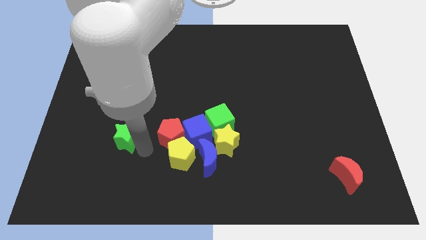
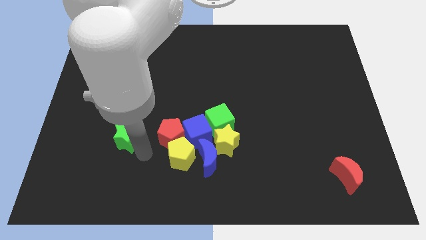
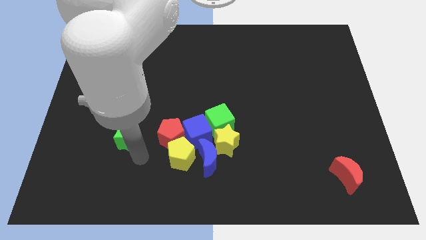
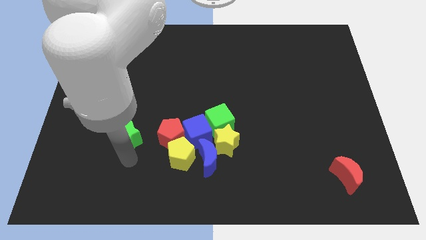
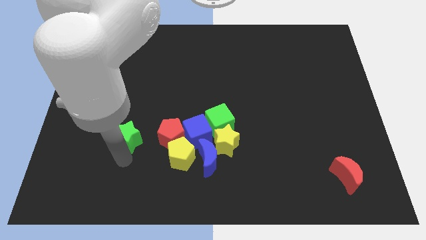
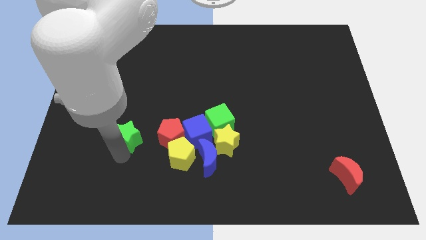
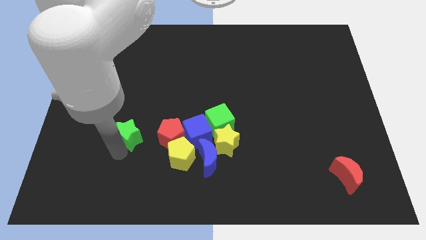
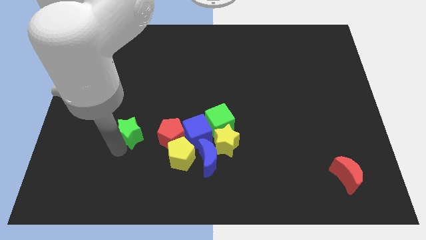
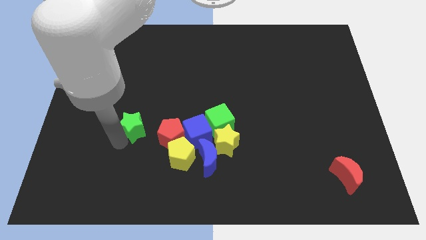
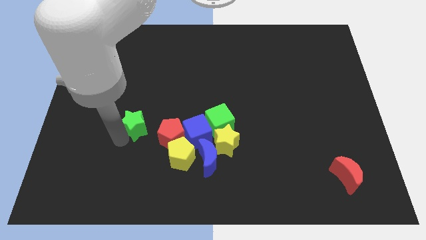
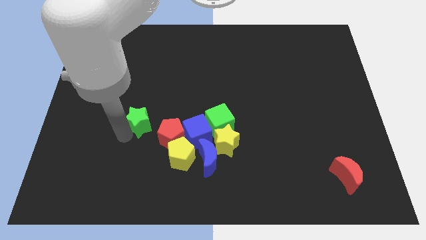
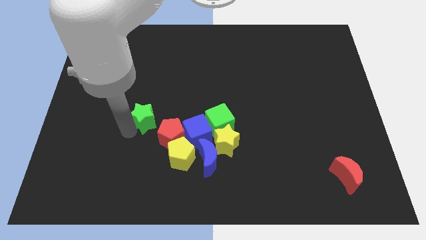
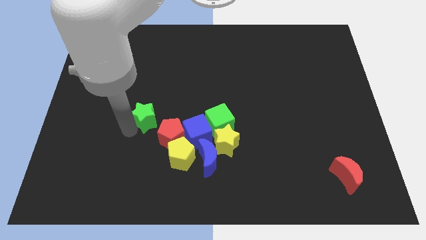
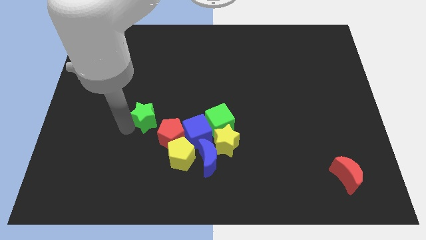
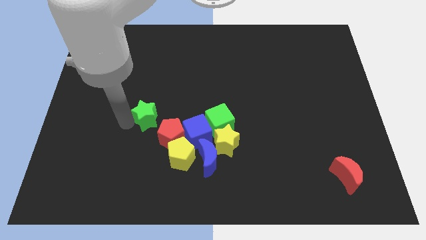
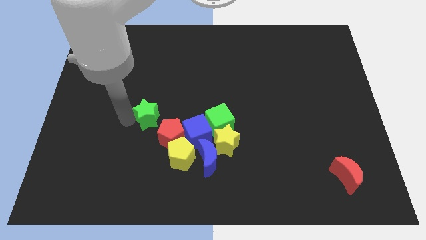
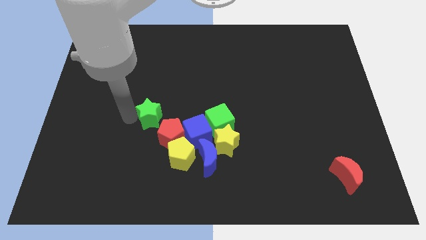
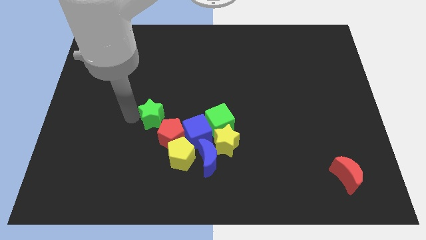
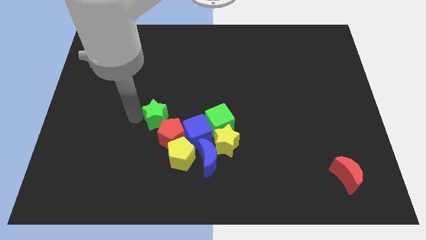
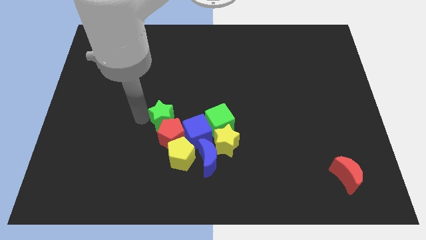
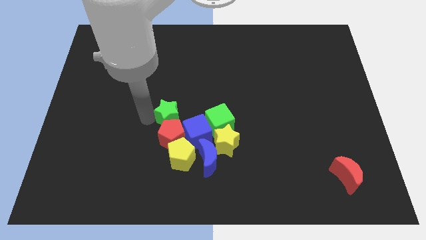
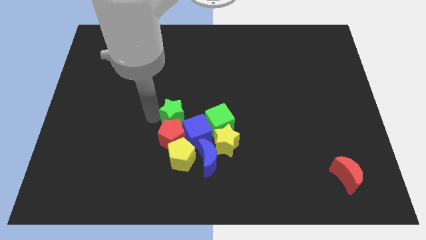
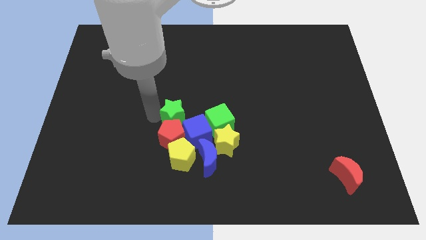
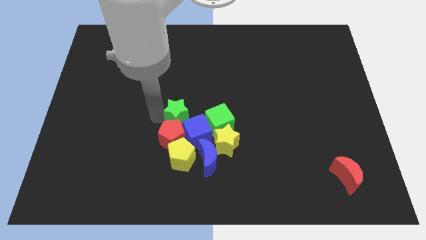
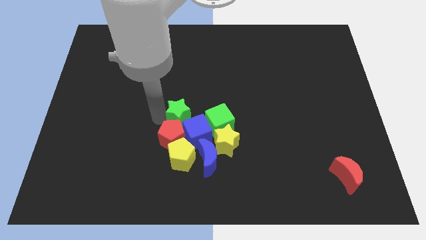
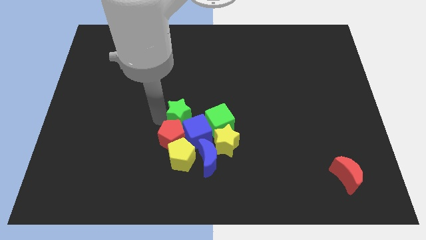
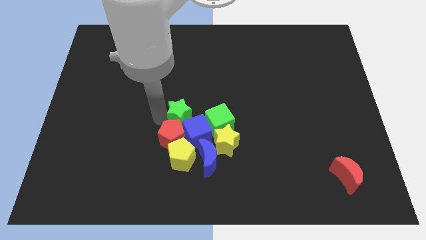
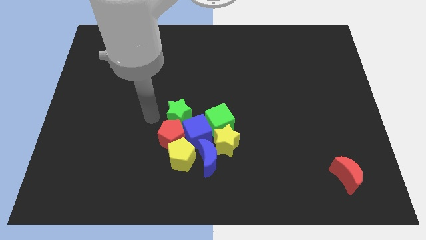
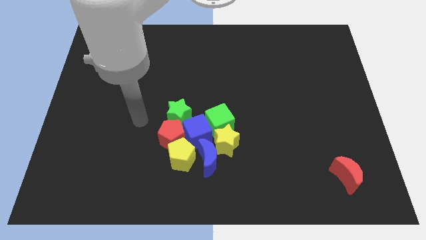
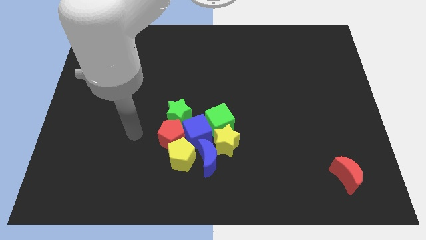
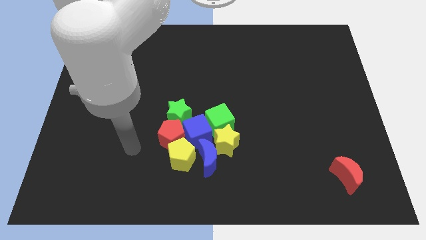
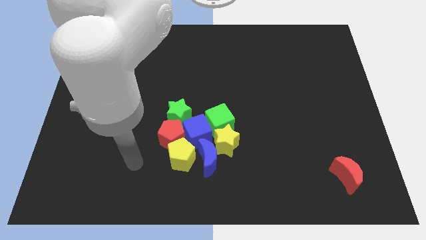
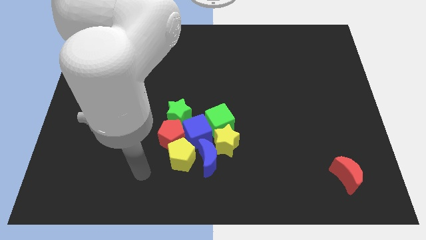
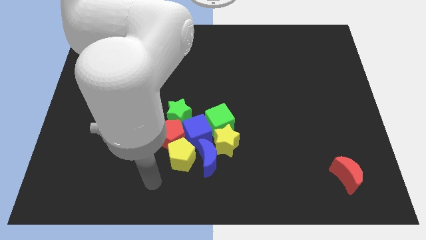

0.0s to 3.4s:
push the green star into the group of blocks

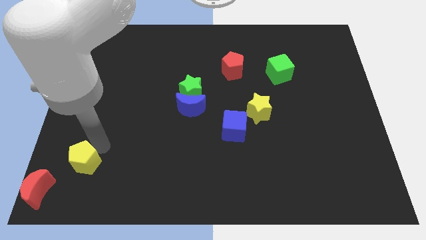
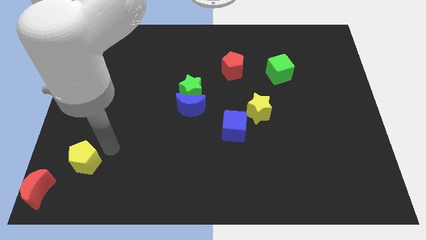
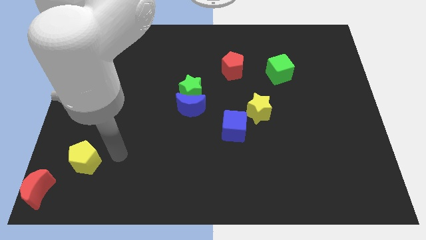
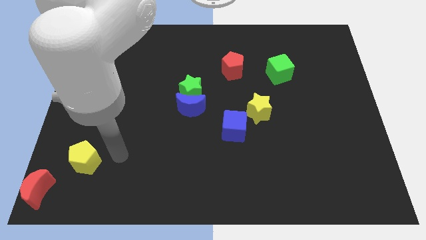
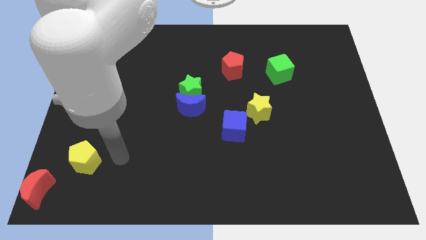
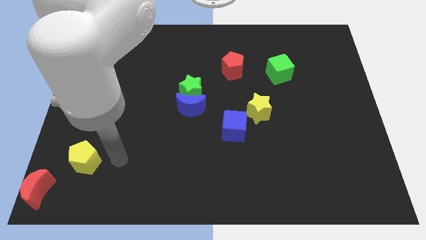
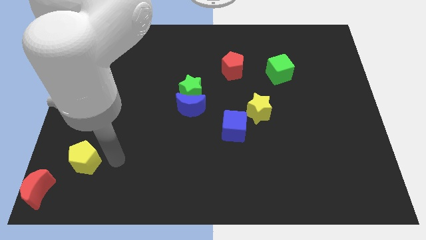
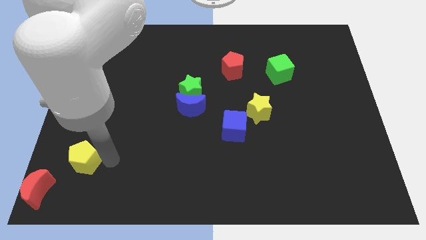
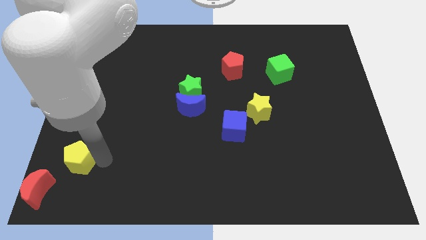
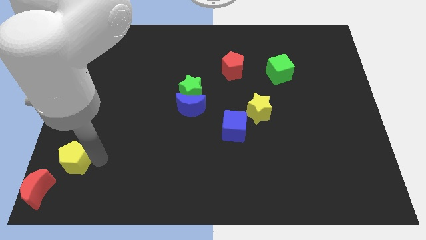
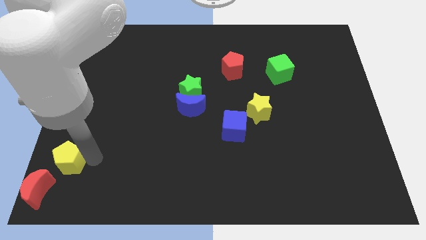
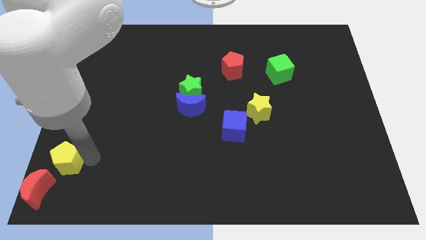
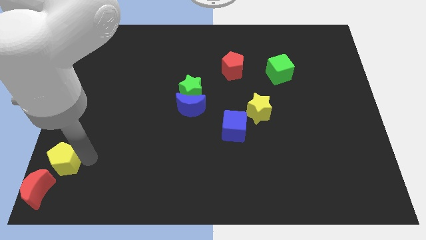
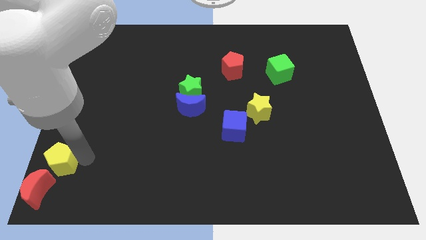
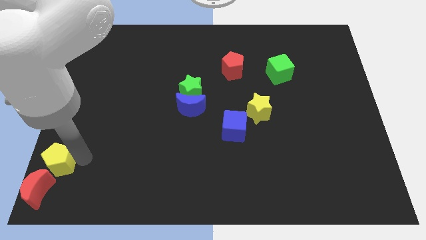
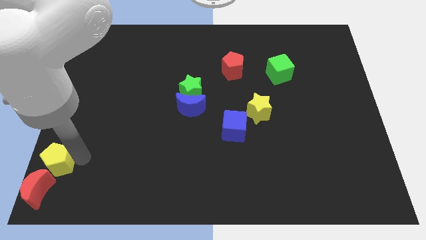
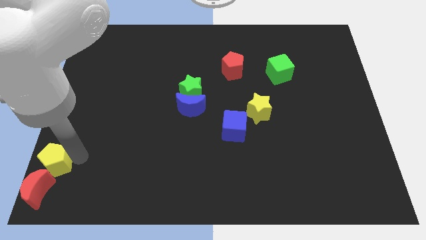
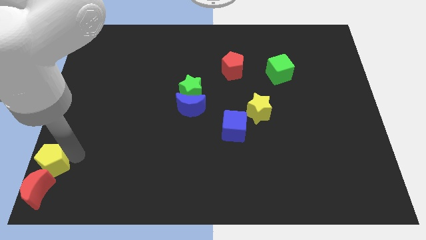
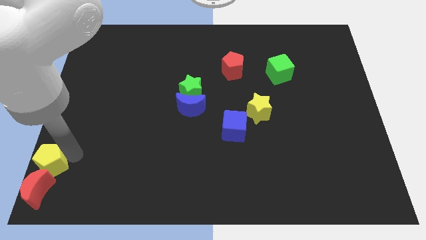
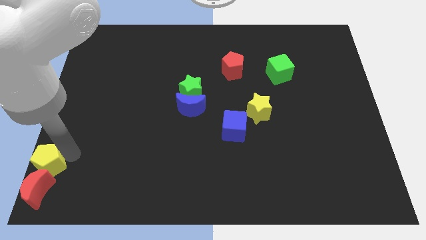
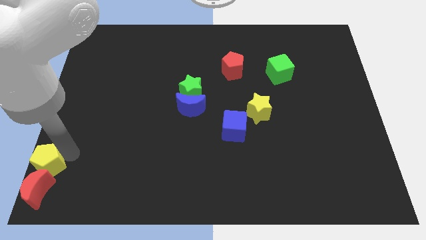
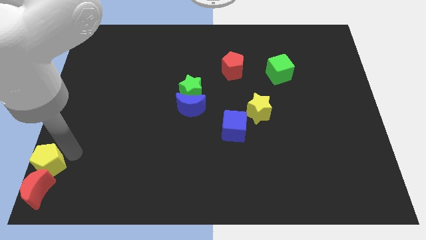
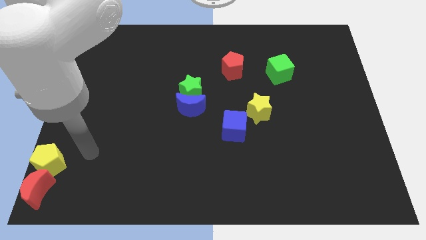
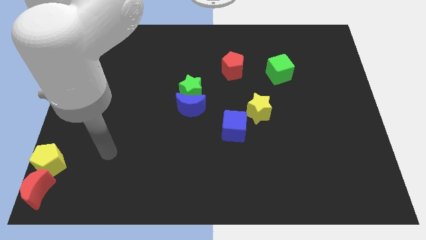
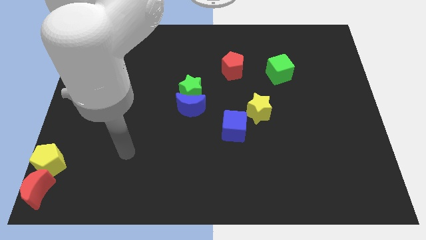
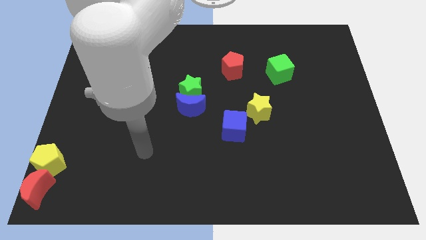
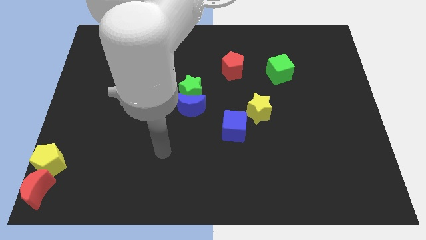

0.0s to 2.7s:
place the yellow pentagon above the red moon

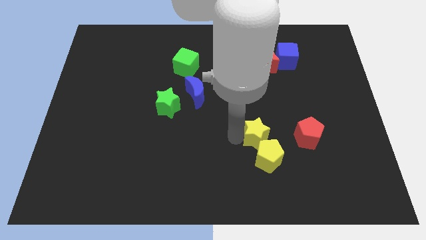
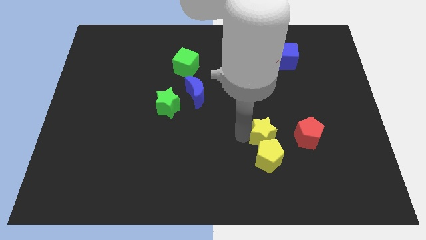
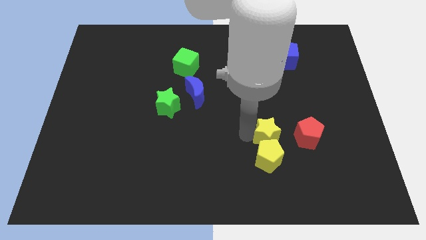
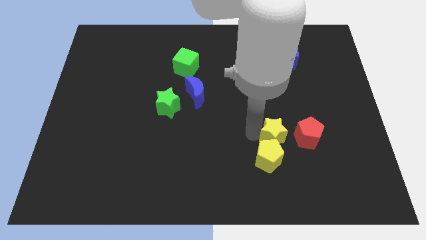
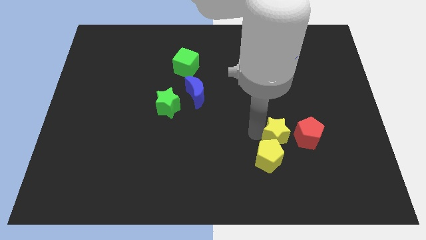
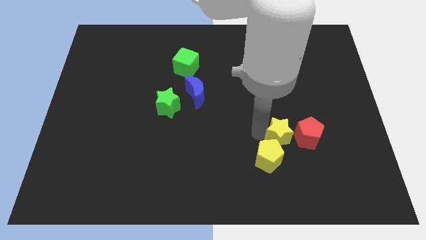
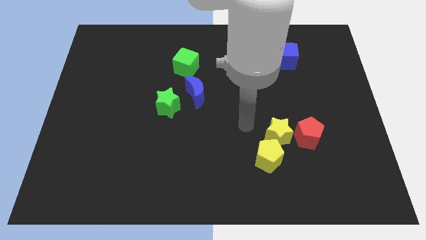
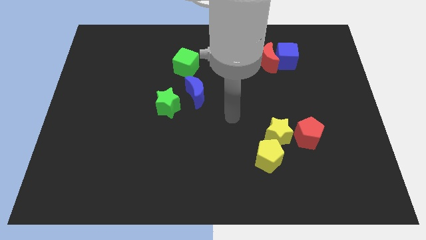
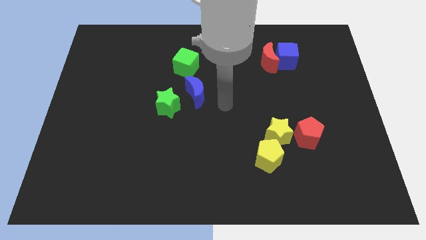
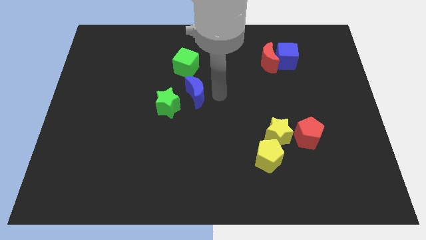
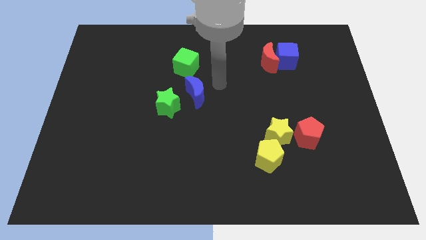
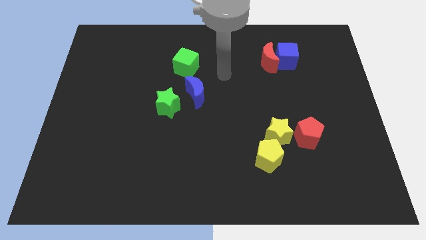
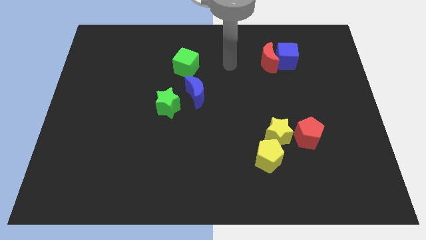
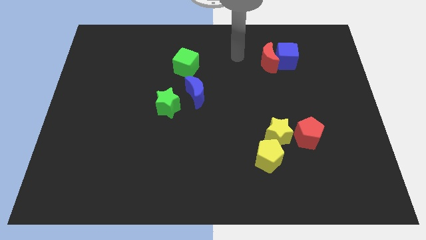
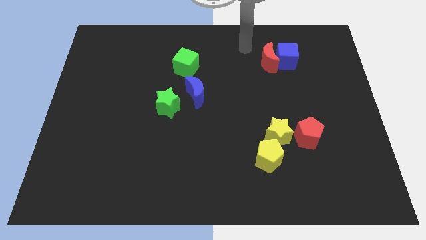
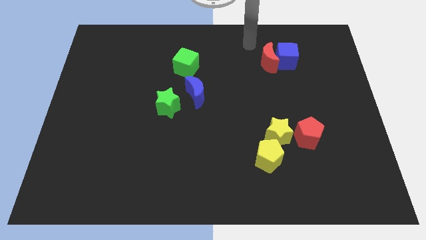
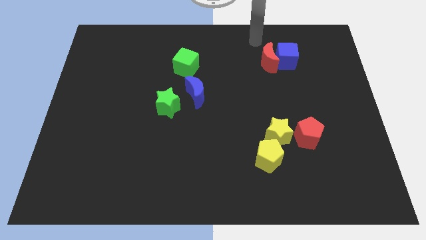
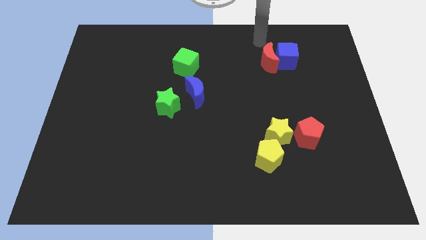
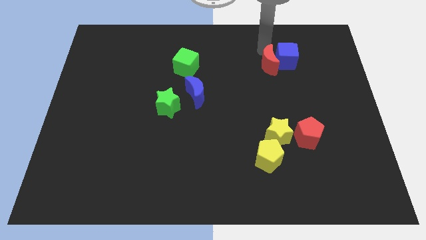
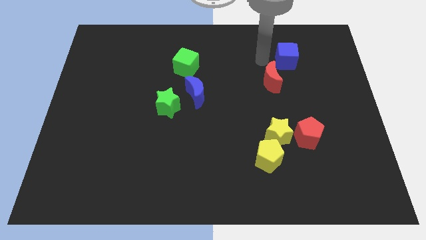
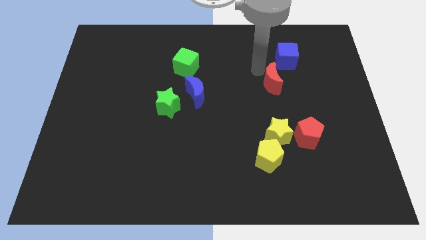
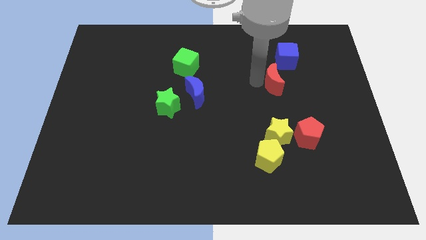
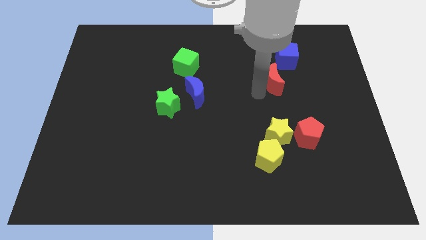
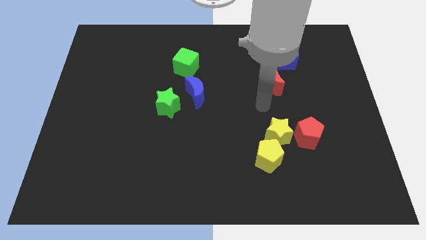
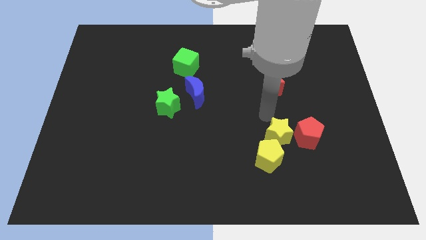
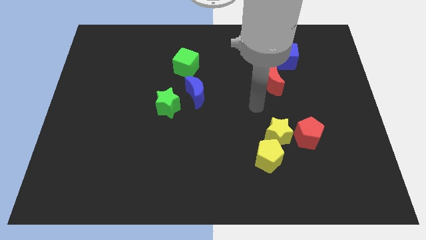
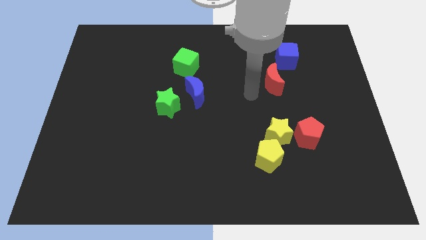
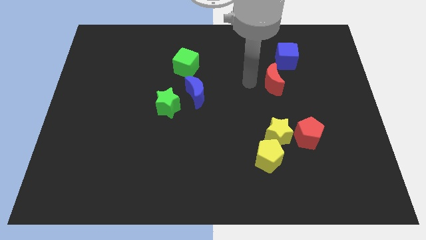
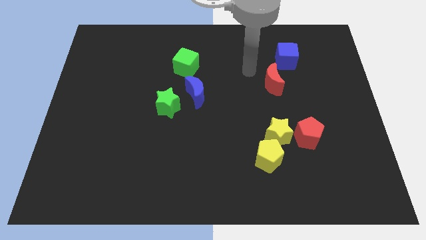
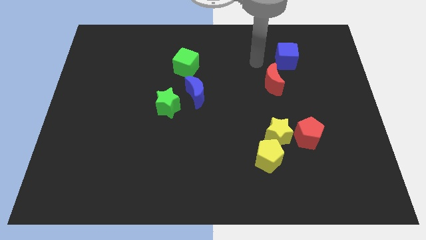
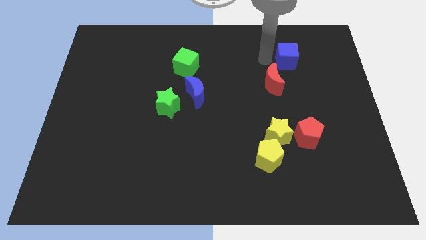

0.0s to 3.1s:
move the red moon diagonal to the blue cube
